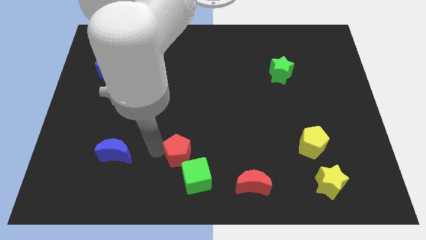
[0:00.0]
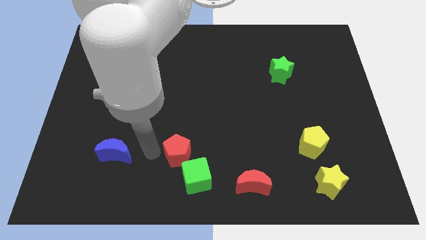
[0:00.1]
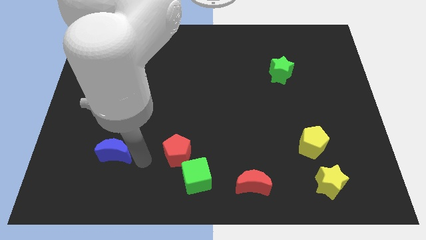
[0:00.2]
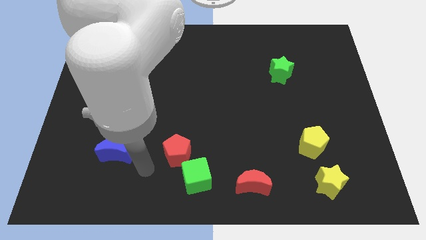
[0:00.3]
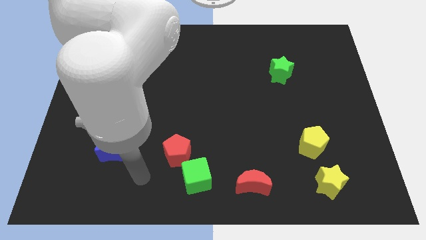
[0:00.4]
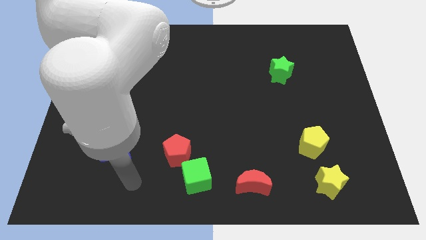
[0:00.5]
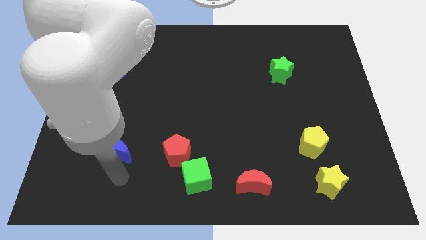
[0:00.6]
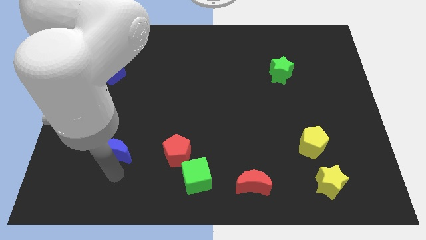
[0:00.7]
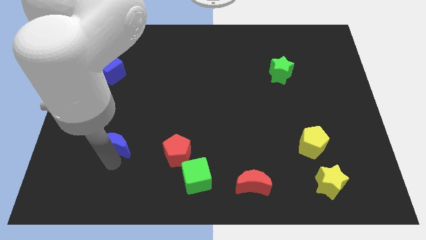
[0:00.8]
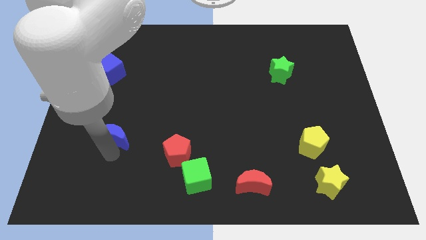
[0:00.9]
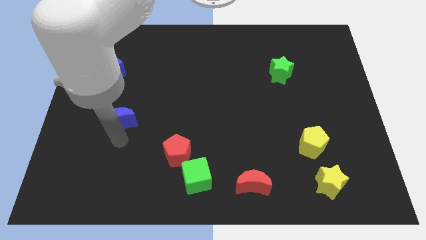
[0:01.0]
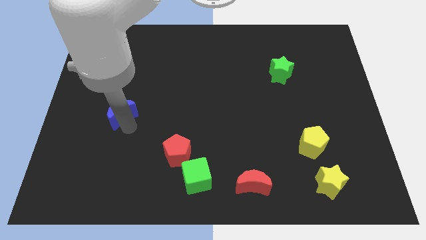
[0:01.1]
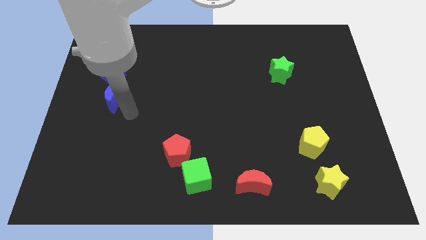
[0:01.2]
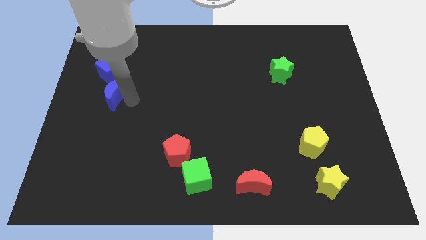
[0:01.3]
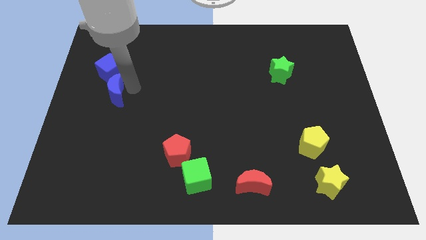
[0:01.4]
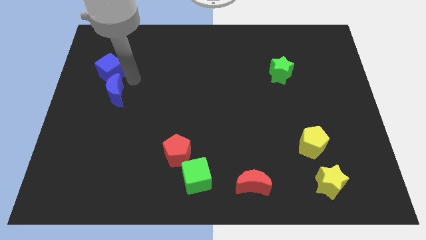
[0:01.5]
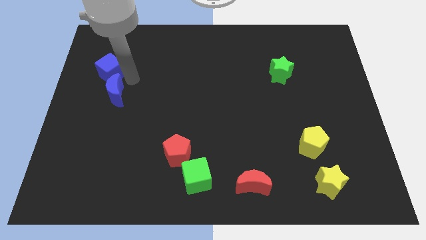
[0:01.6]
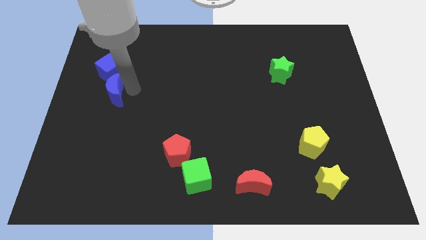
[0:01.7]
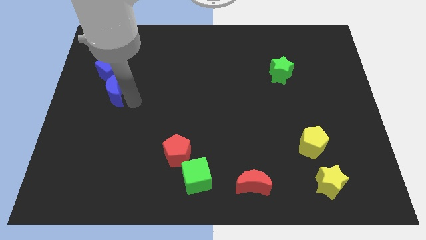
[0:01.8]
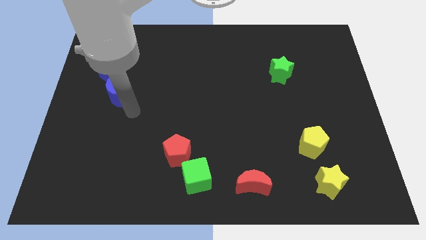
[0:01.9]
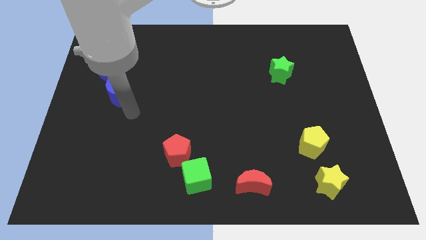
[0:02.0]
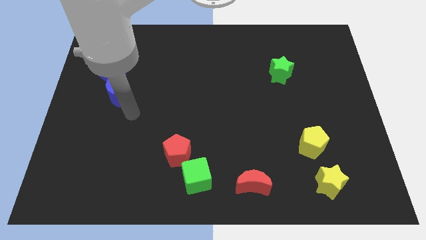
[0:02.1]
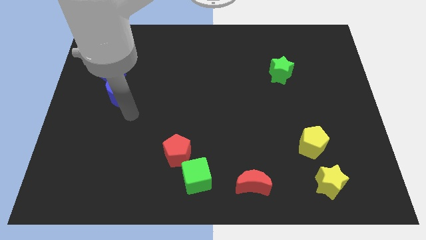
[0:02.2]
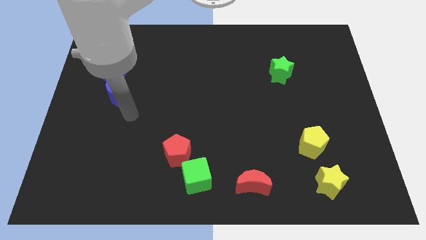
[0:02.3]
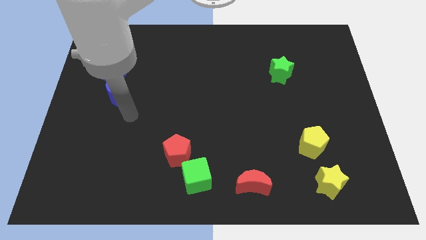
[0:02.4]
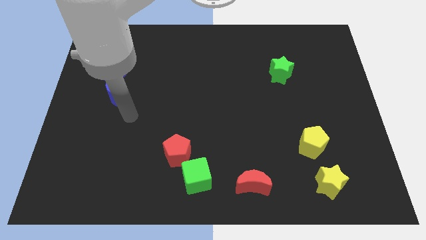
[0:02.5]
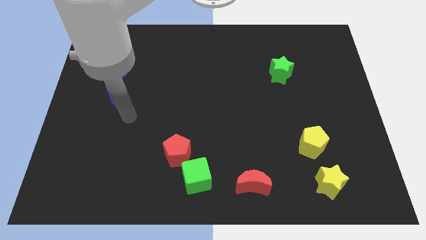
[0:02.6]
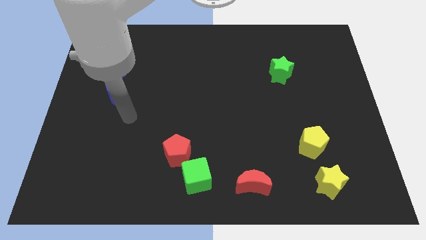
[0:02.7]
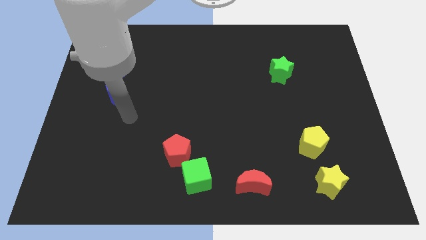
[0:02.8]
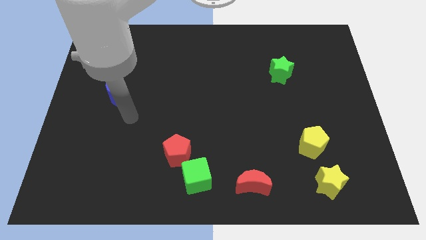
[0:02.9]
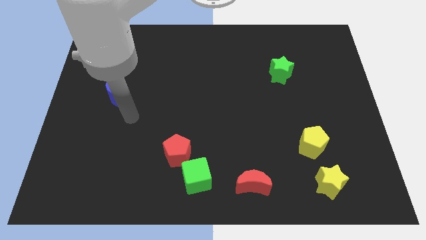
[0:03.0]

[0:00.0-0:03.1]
slide the blue moon towards the blue cube

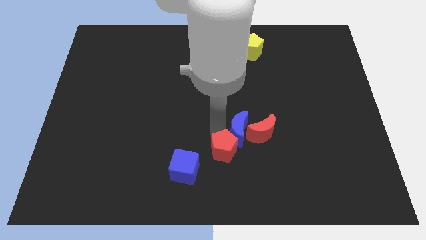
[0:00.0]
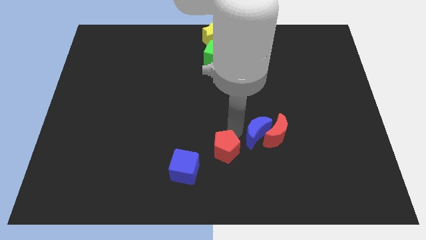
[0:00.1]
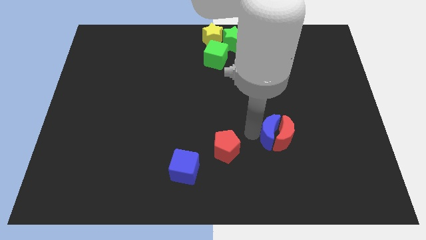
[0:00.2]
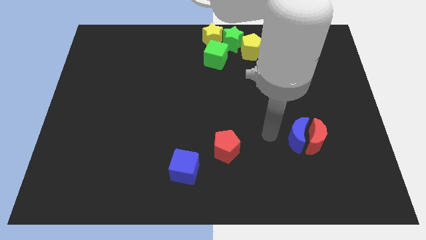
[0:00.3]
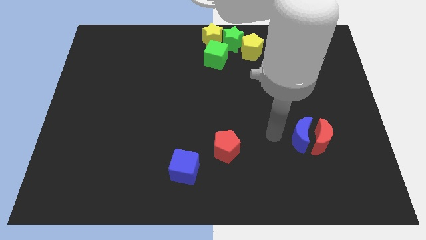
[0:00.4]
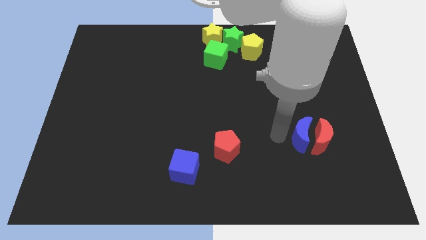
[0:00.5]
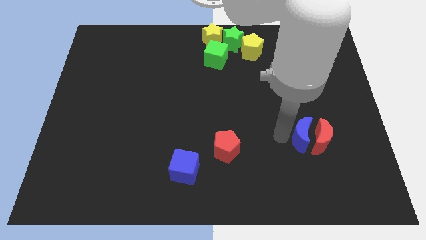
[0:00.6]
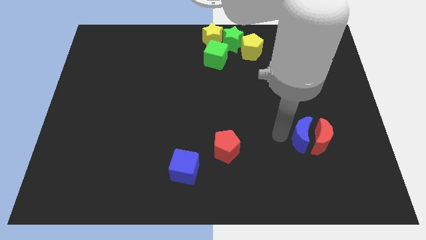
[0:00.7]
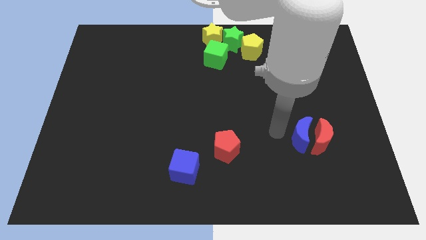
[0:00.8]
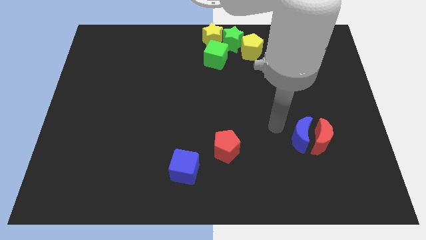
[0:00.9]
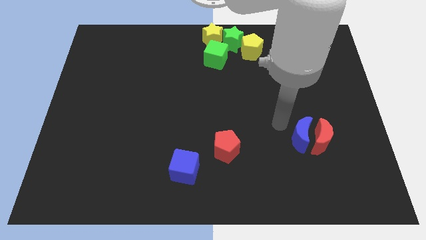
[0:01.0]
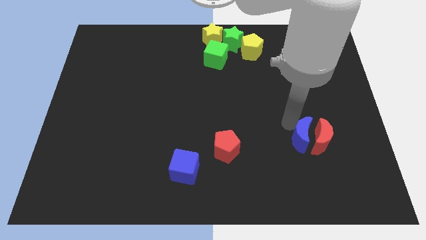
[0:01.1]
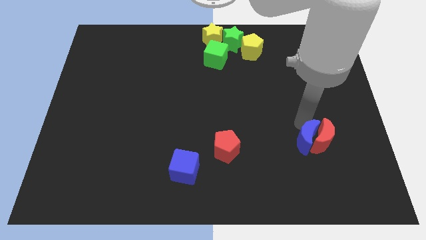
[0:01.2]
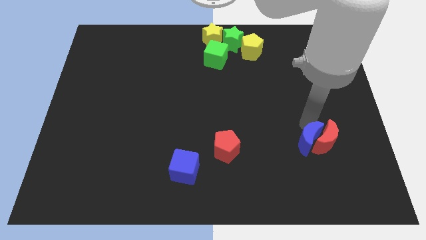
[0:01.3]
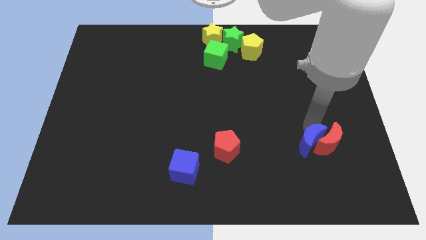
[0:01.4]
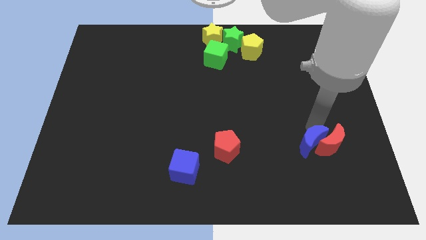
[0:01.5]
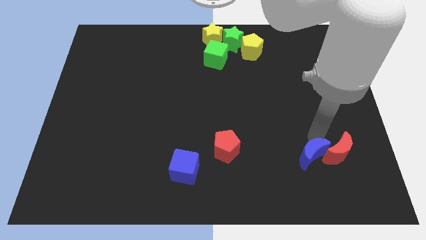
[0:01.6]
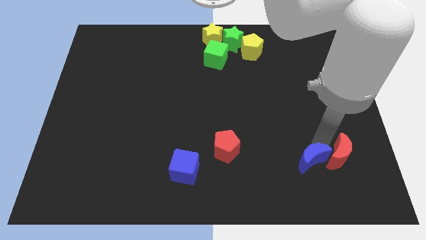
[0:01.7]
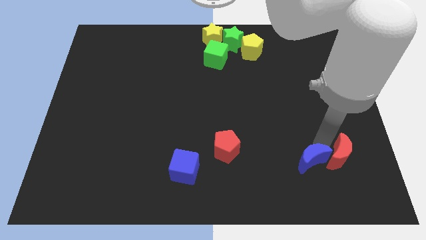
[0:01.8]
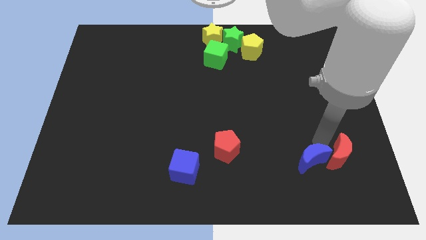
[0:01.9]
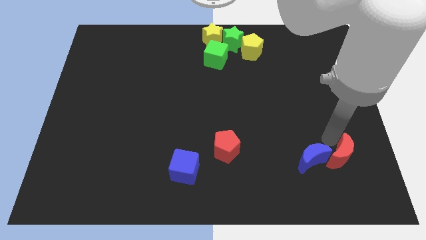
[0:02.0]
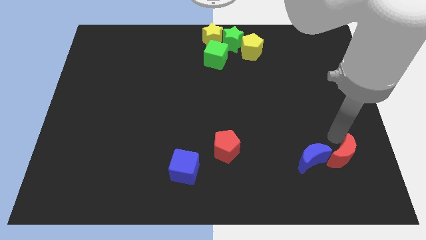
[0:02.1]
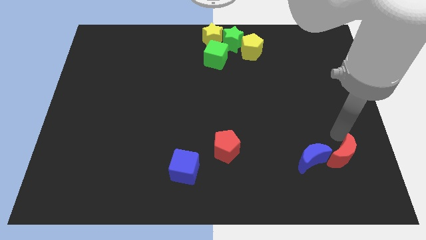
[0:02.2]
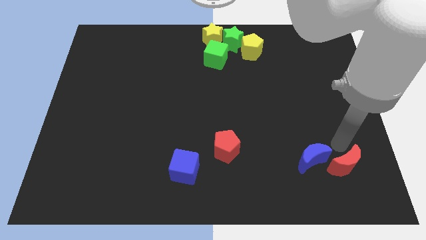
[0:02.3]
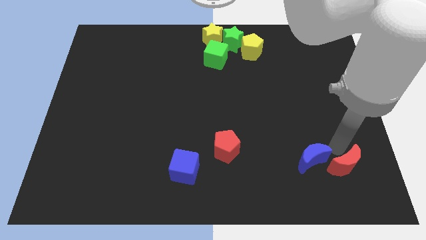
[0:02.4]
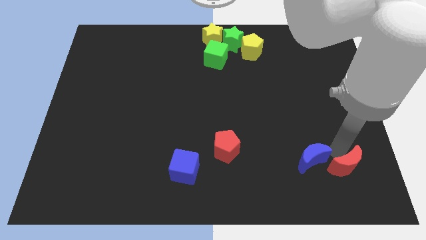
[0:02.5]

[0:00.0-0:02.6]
push the red crescent with the blue crescent

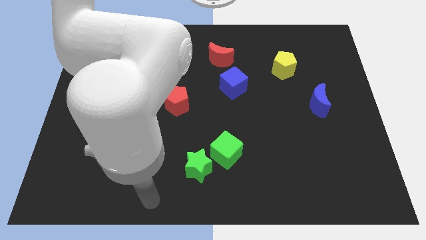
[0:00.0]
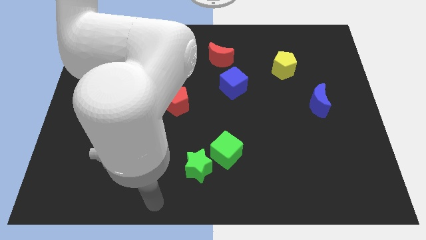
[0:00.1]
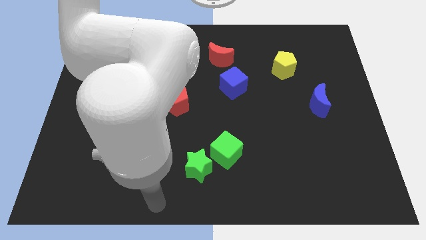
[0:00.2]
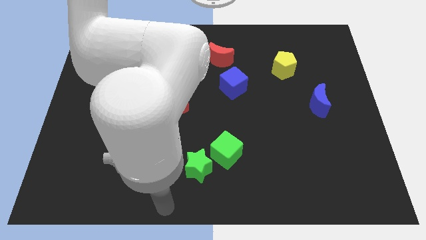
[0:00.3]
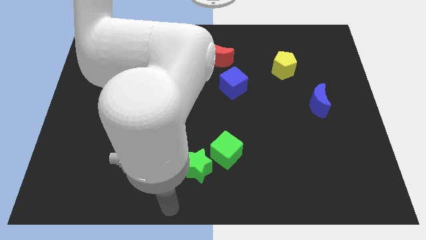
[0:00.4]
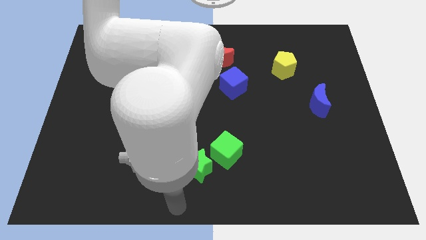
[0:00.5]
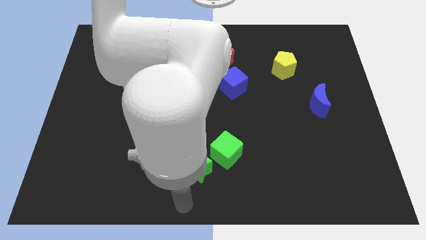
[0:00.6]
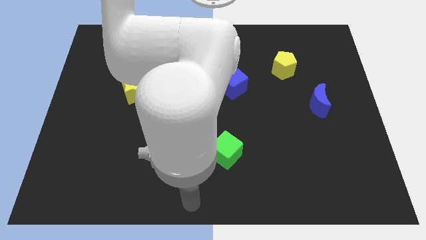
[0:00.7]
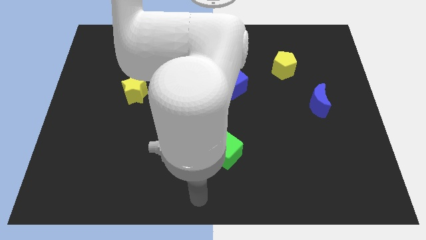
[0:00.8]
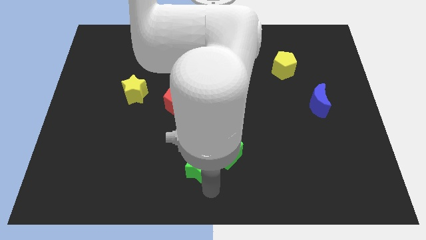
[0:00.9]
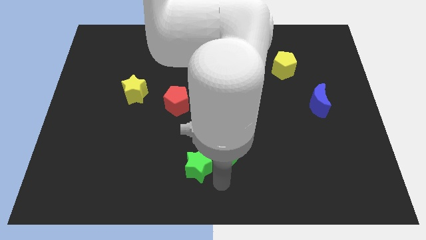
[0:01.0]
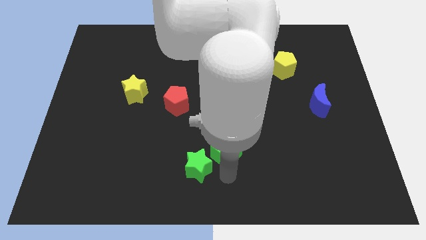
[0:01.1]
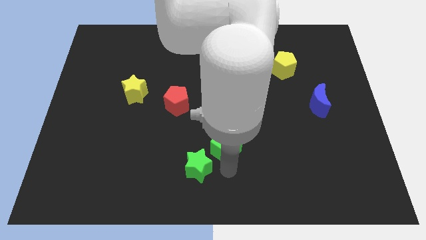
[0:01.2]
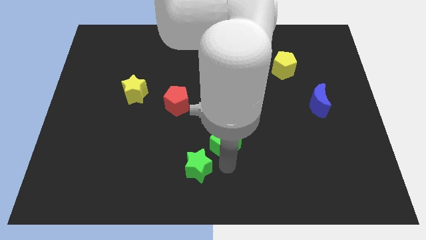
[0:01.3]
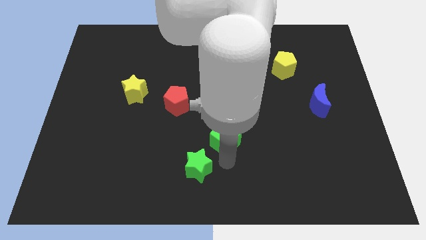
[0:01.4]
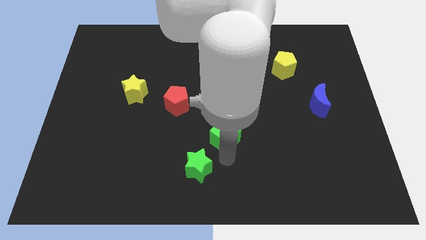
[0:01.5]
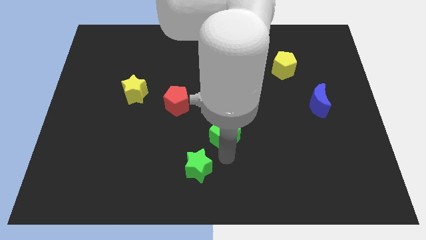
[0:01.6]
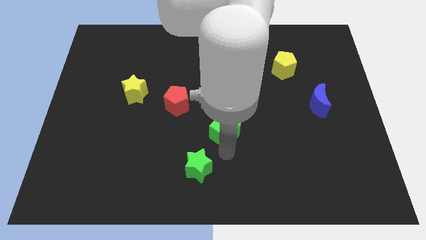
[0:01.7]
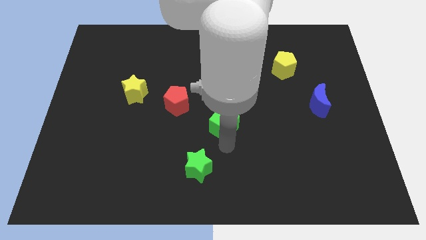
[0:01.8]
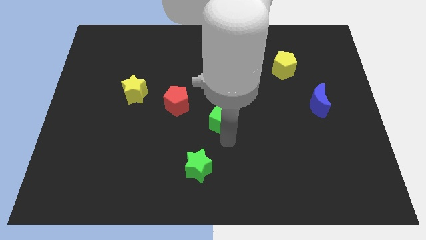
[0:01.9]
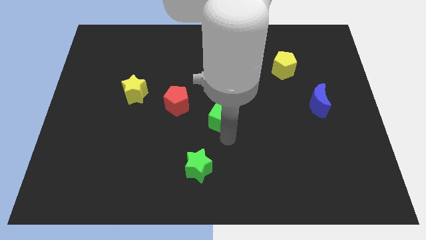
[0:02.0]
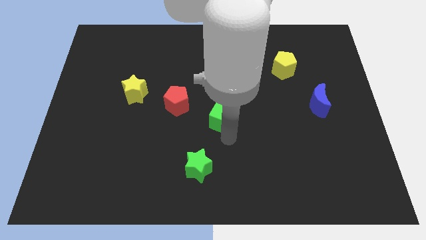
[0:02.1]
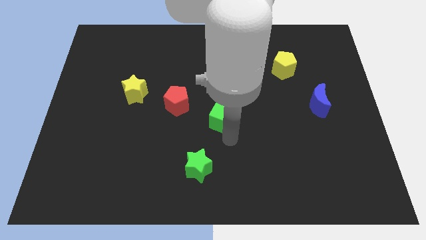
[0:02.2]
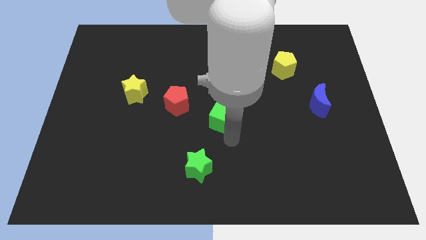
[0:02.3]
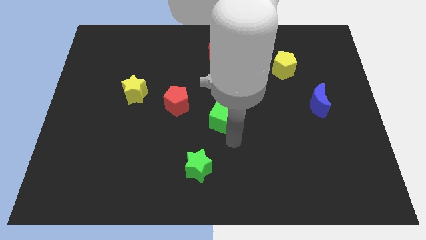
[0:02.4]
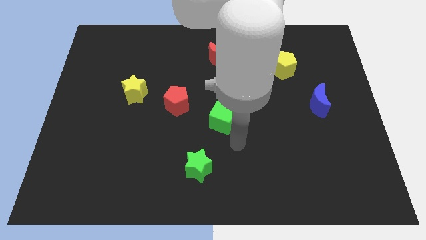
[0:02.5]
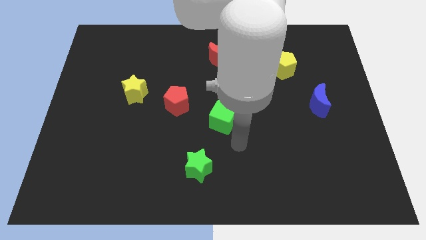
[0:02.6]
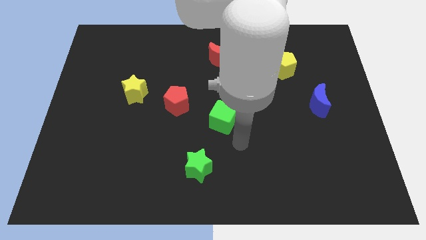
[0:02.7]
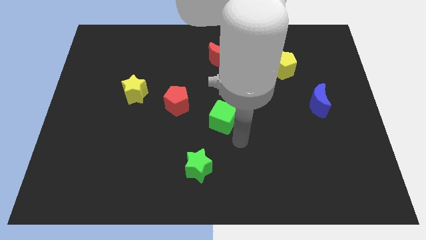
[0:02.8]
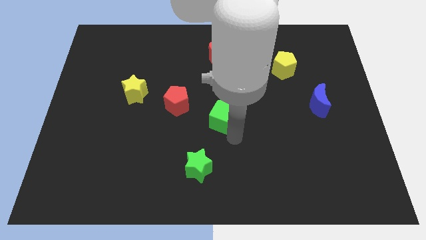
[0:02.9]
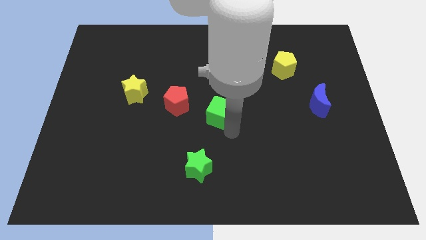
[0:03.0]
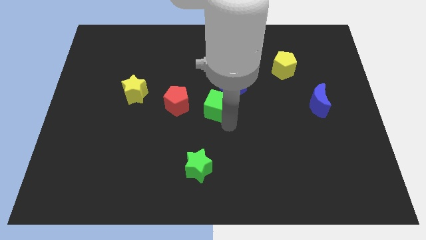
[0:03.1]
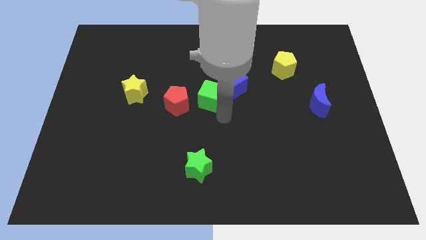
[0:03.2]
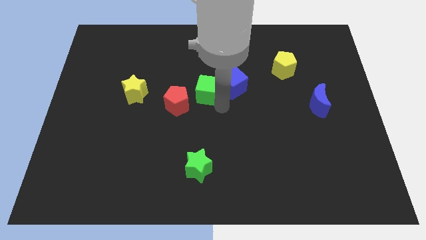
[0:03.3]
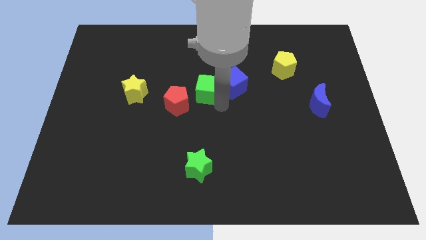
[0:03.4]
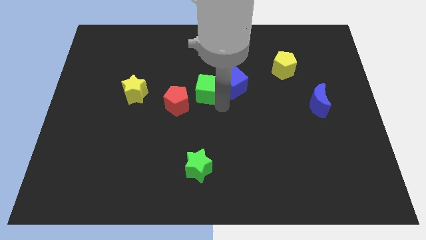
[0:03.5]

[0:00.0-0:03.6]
place the green cube in between the red pentagon and blue cube
